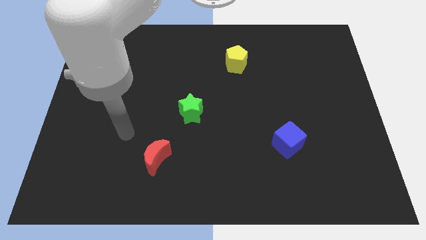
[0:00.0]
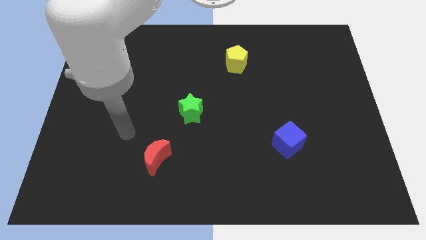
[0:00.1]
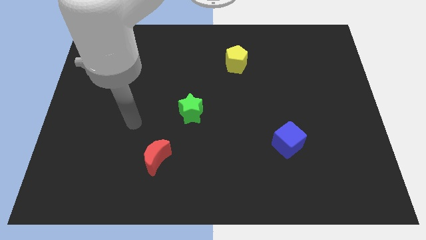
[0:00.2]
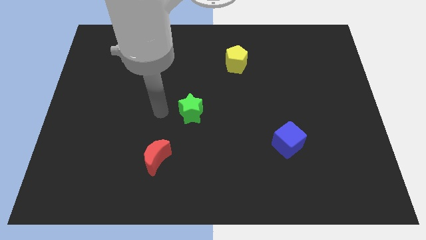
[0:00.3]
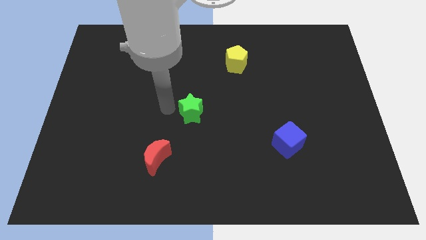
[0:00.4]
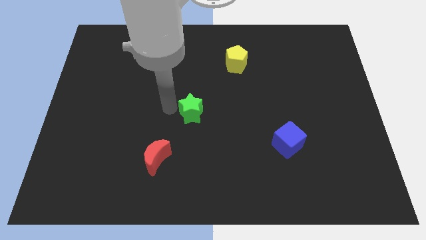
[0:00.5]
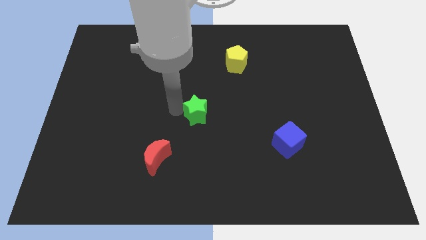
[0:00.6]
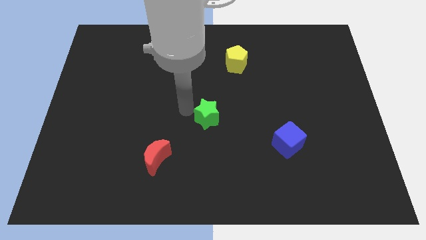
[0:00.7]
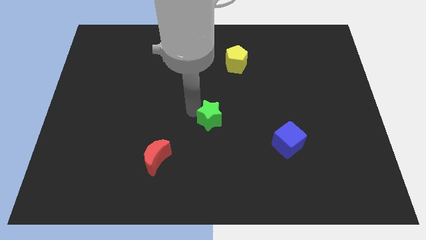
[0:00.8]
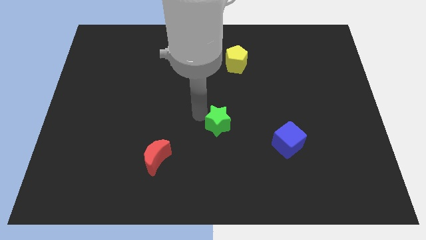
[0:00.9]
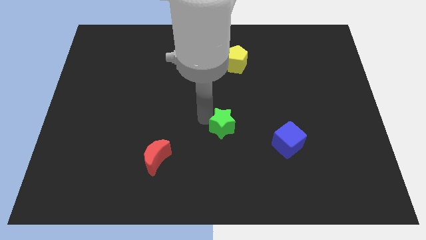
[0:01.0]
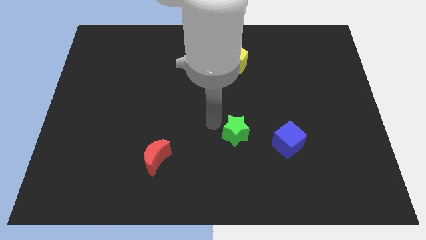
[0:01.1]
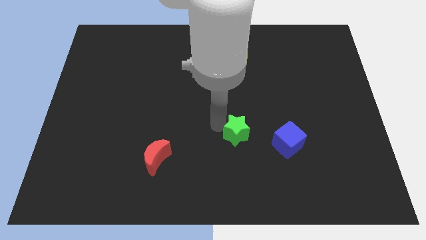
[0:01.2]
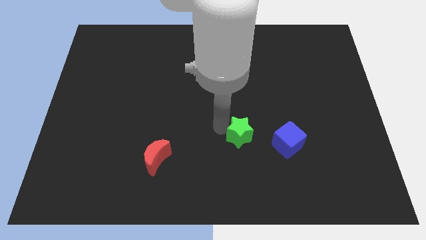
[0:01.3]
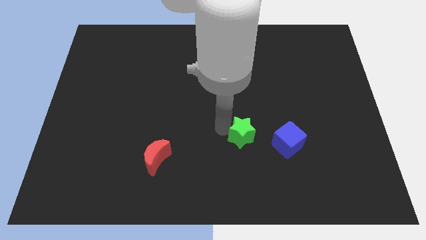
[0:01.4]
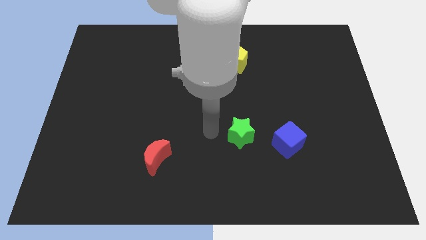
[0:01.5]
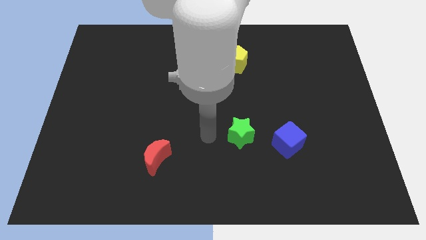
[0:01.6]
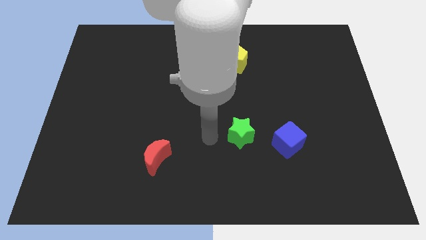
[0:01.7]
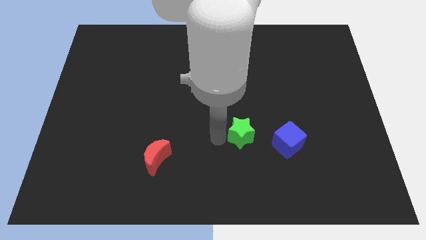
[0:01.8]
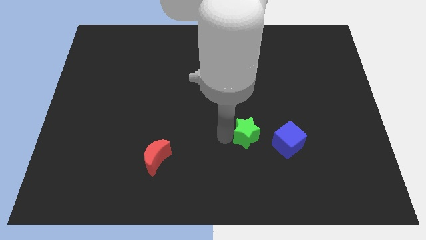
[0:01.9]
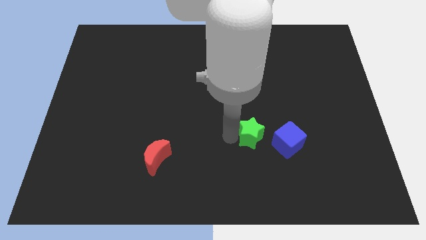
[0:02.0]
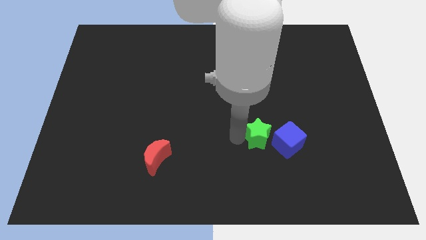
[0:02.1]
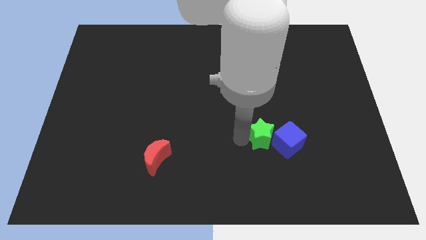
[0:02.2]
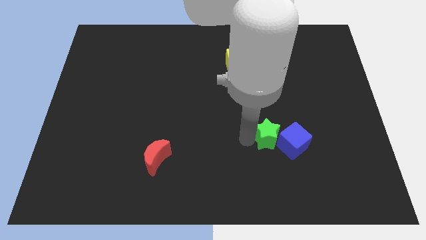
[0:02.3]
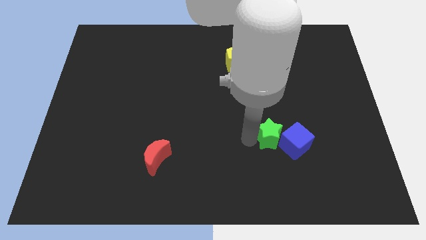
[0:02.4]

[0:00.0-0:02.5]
push the green block to the blue cube

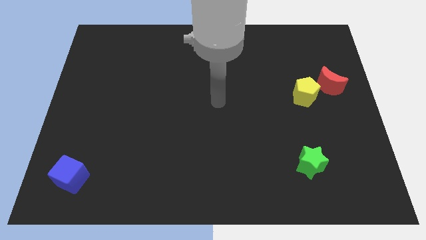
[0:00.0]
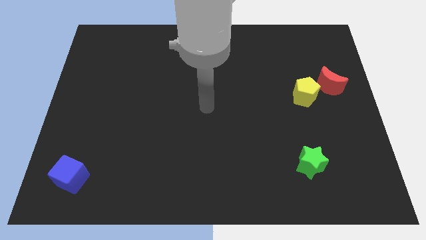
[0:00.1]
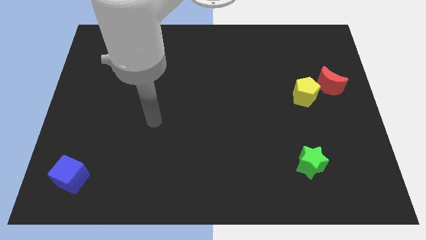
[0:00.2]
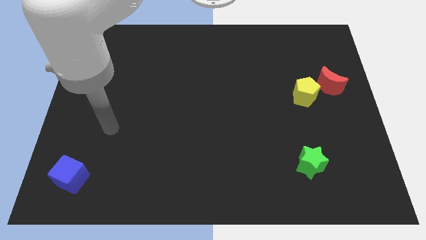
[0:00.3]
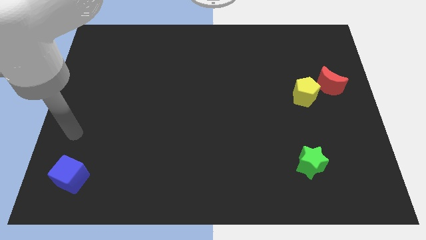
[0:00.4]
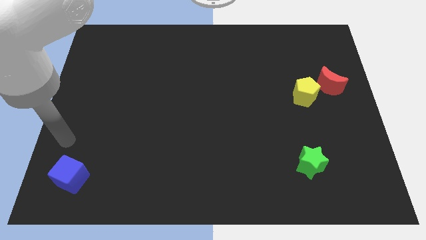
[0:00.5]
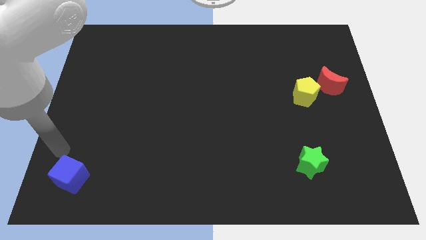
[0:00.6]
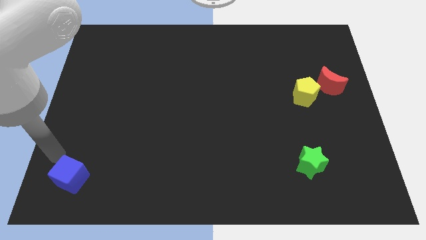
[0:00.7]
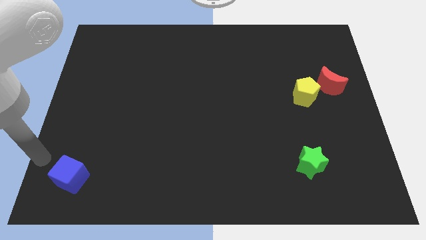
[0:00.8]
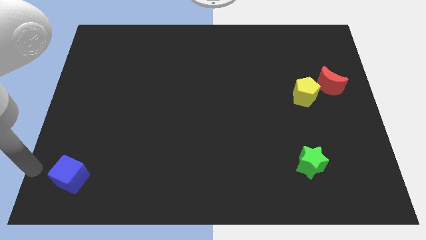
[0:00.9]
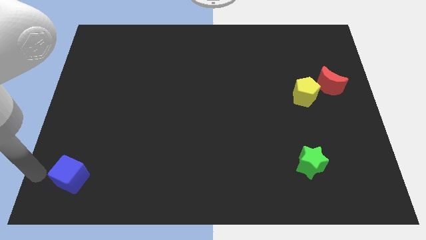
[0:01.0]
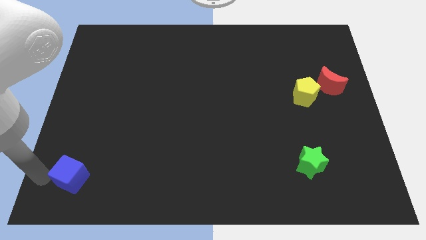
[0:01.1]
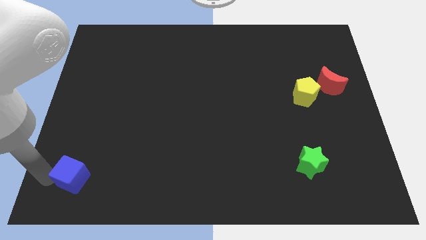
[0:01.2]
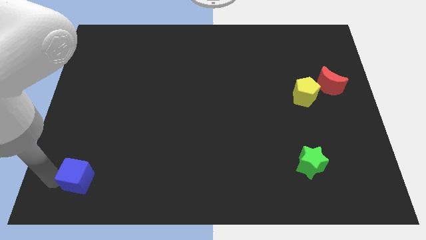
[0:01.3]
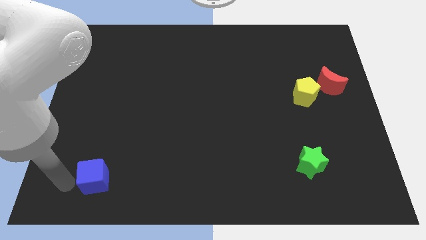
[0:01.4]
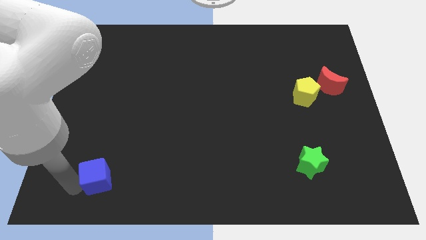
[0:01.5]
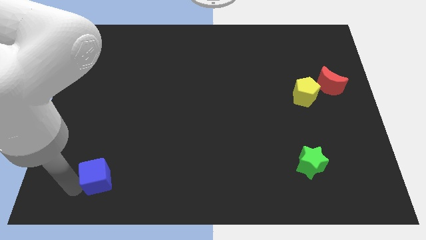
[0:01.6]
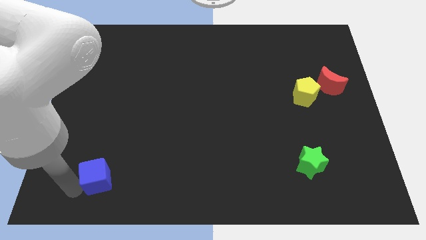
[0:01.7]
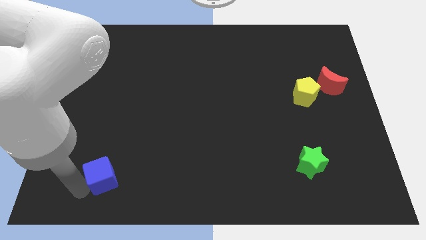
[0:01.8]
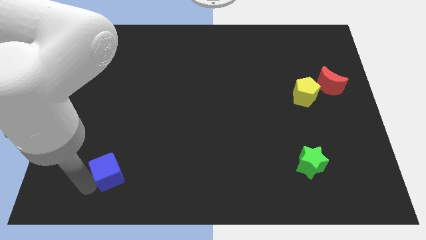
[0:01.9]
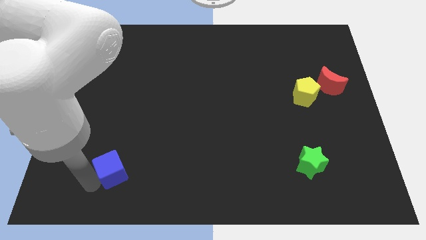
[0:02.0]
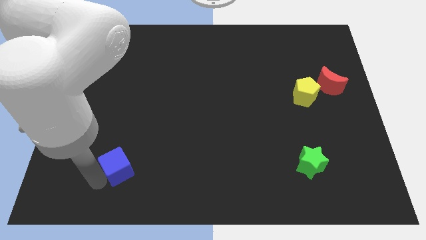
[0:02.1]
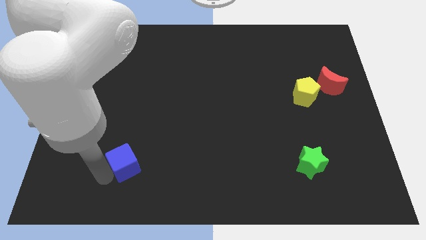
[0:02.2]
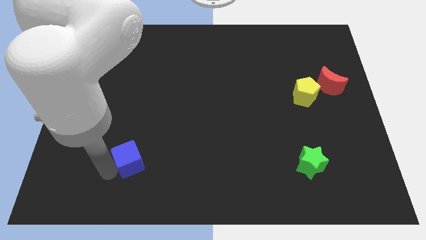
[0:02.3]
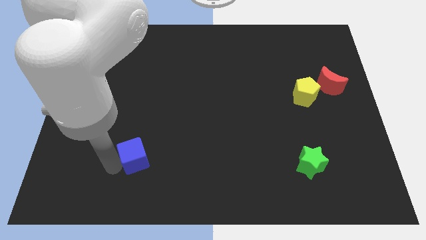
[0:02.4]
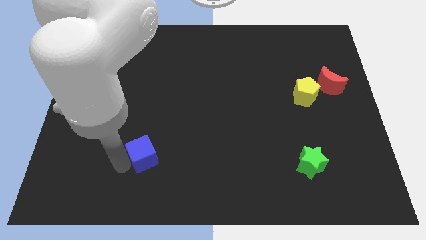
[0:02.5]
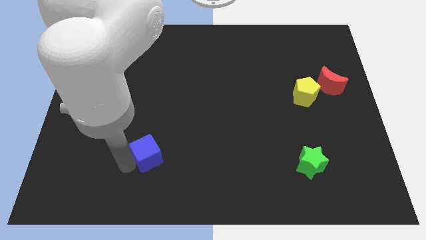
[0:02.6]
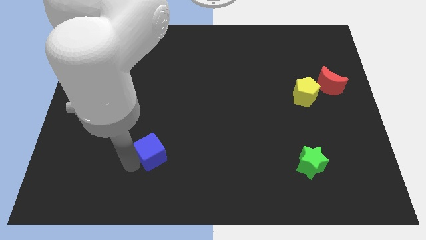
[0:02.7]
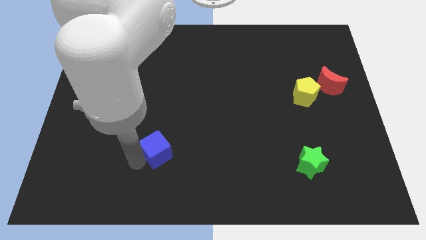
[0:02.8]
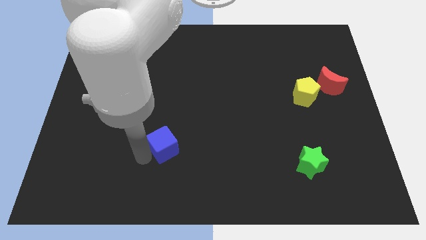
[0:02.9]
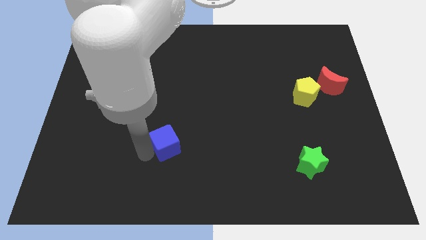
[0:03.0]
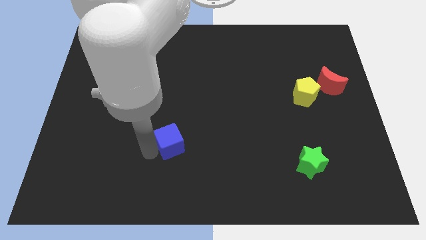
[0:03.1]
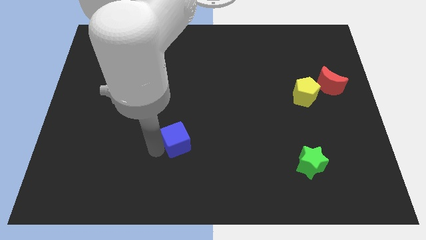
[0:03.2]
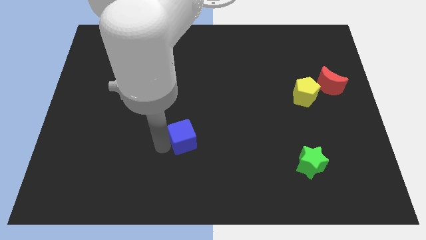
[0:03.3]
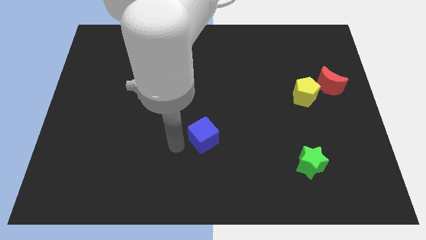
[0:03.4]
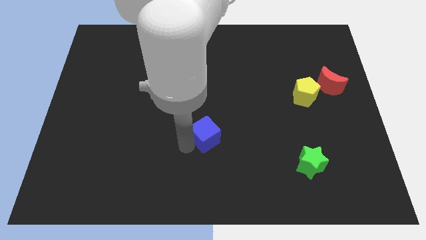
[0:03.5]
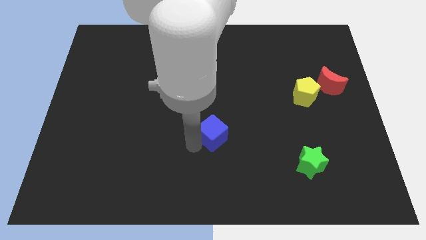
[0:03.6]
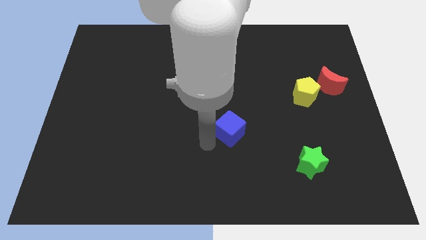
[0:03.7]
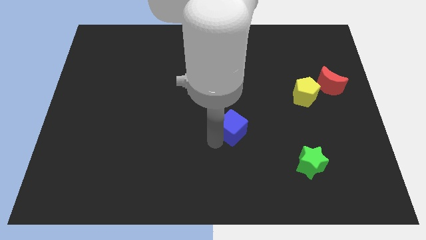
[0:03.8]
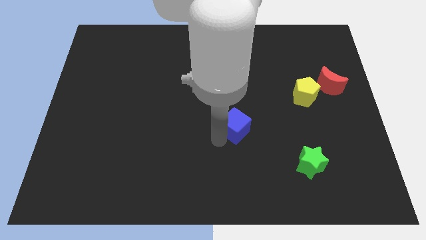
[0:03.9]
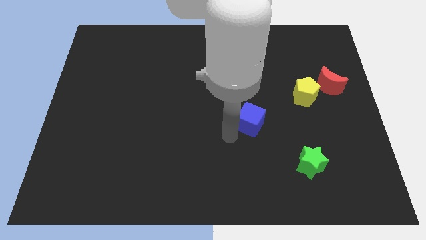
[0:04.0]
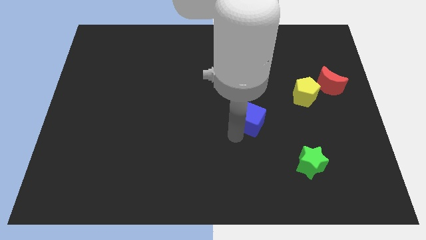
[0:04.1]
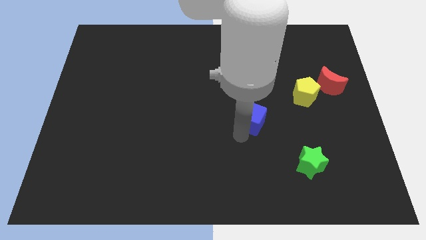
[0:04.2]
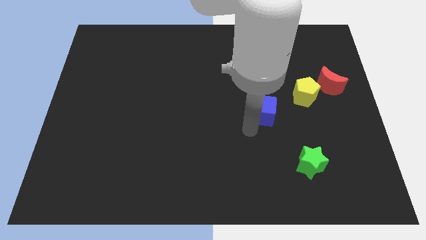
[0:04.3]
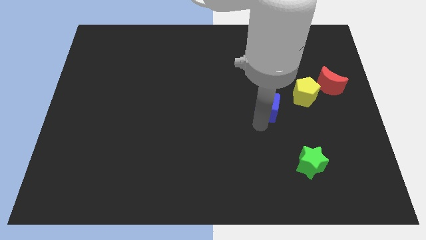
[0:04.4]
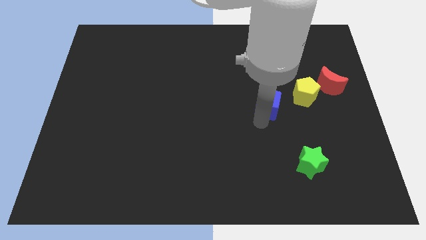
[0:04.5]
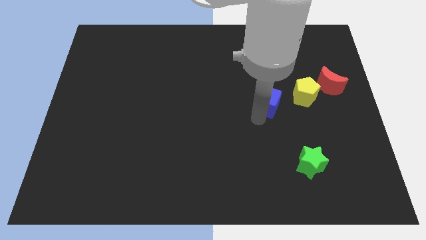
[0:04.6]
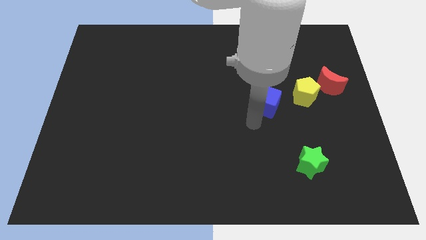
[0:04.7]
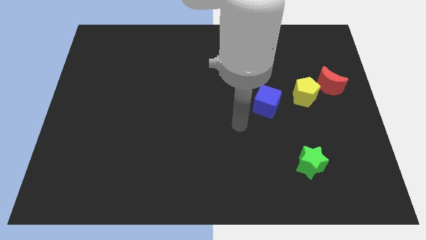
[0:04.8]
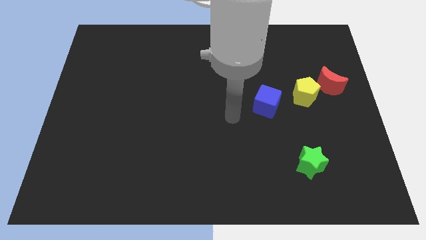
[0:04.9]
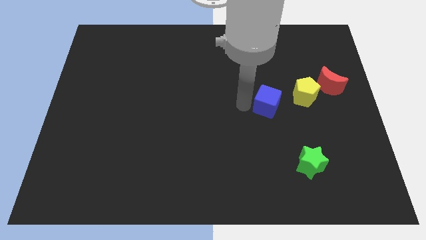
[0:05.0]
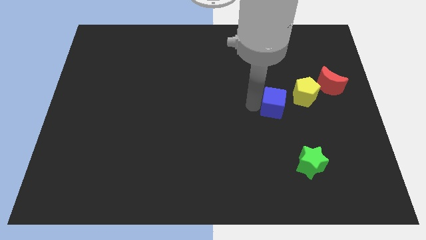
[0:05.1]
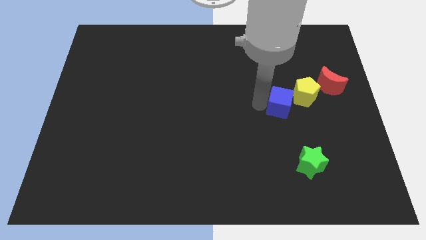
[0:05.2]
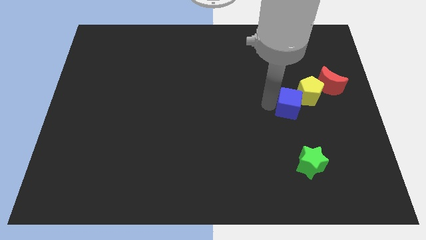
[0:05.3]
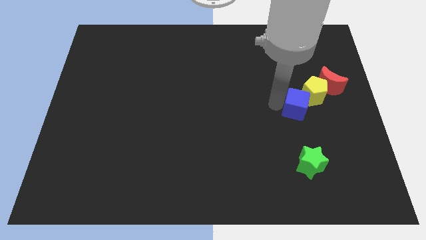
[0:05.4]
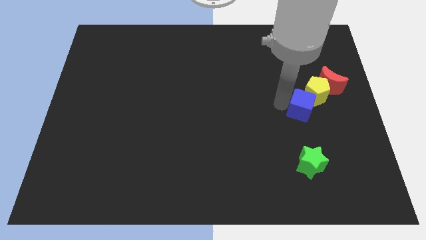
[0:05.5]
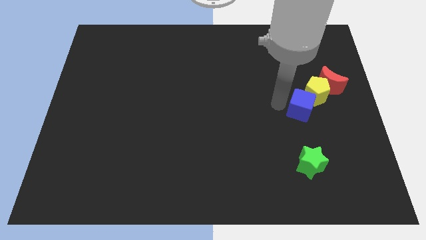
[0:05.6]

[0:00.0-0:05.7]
push the blue block next to the yellow block
